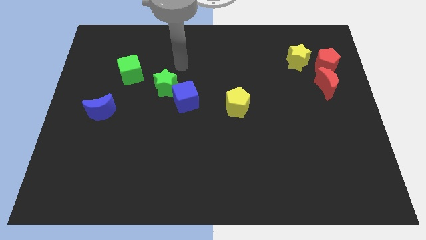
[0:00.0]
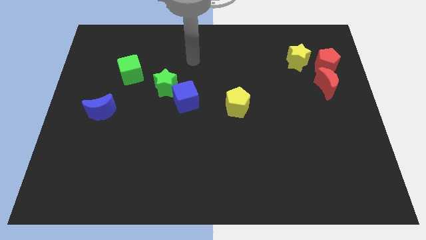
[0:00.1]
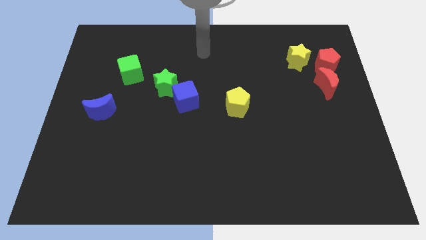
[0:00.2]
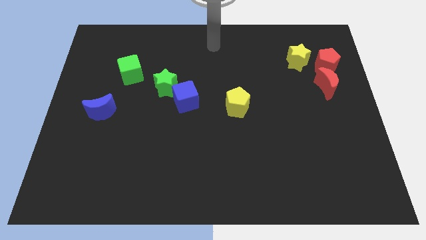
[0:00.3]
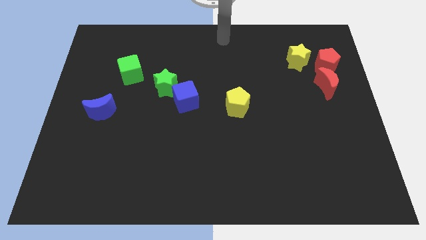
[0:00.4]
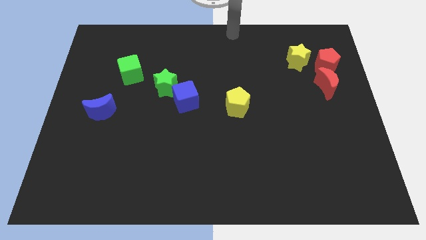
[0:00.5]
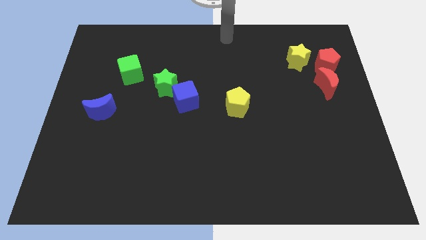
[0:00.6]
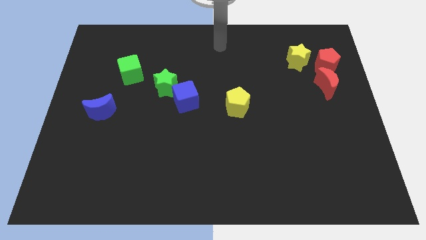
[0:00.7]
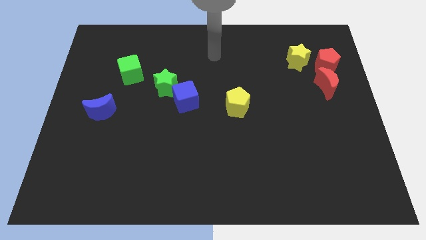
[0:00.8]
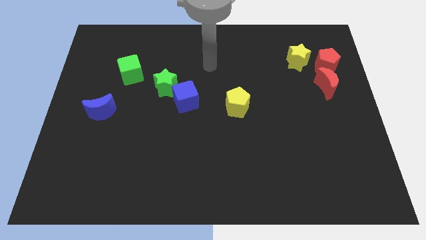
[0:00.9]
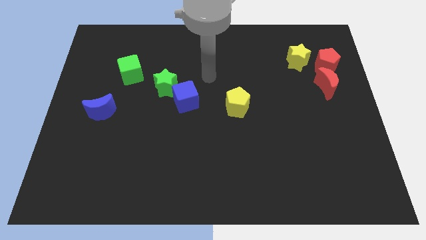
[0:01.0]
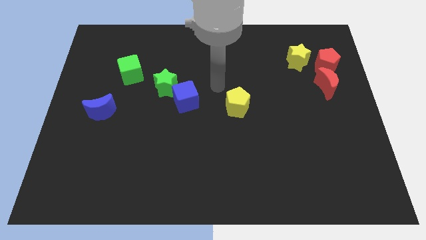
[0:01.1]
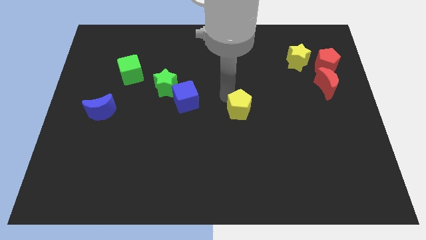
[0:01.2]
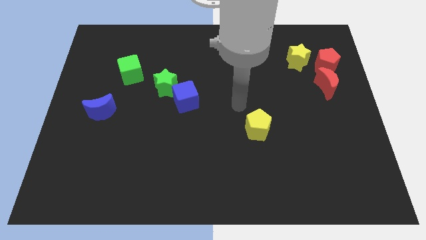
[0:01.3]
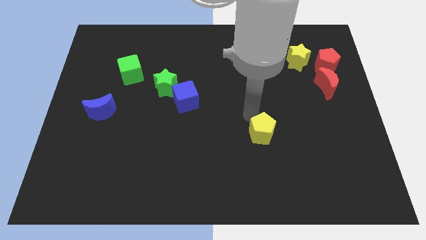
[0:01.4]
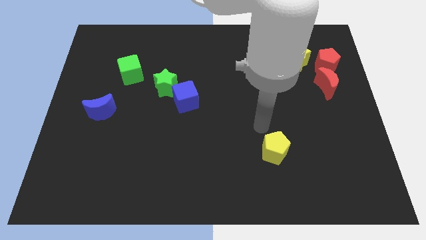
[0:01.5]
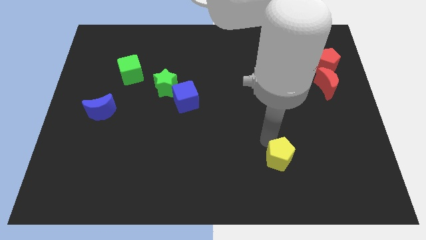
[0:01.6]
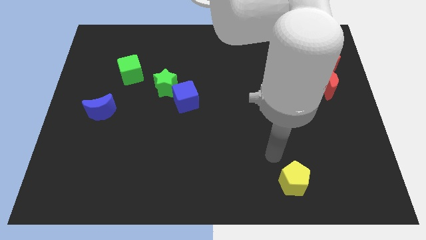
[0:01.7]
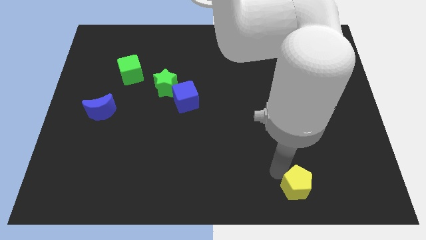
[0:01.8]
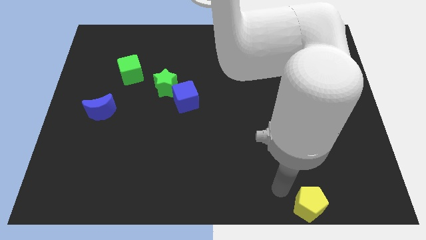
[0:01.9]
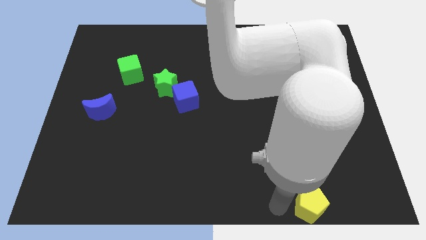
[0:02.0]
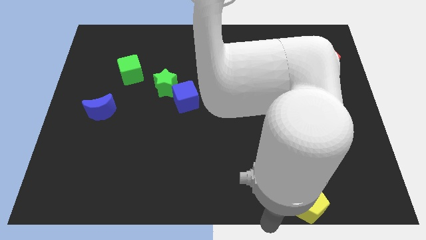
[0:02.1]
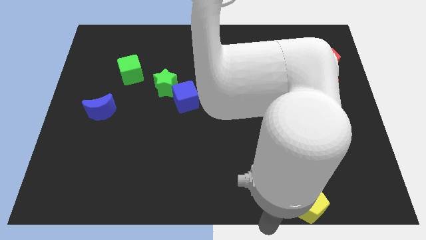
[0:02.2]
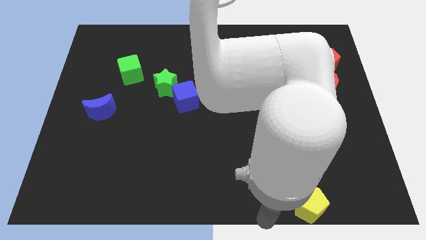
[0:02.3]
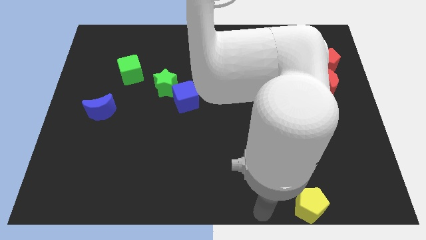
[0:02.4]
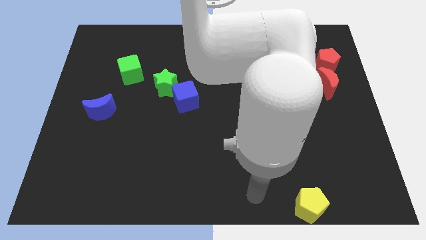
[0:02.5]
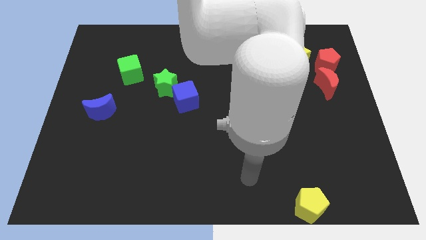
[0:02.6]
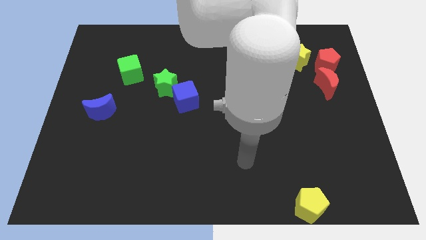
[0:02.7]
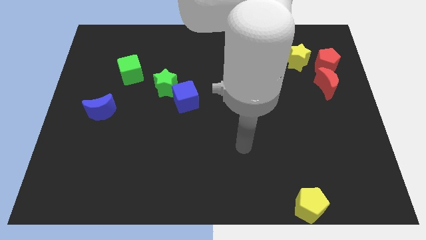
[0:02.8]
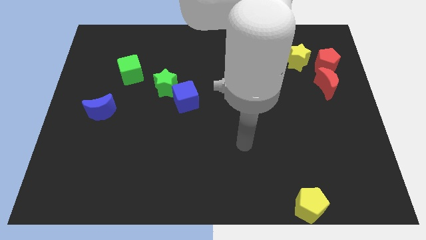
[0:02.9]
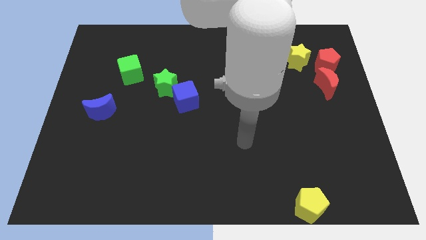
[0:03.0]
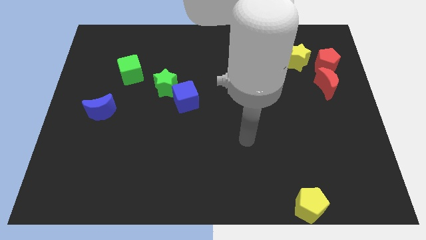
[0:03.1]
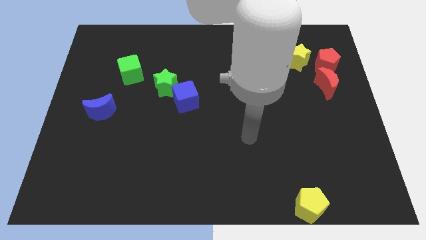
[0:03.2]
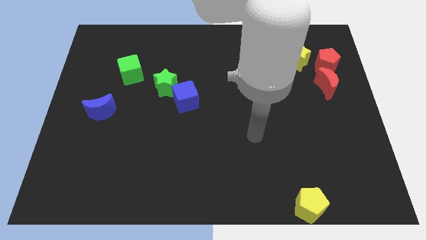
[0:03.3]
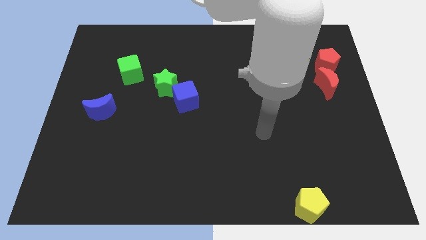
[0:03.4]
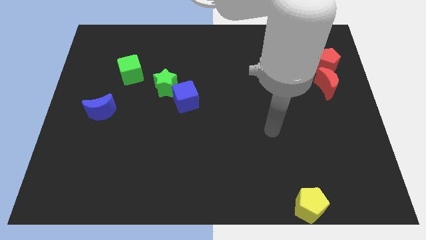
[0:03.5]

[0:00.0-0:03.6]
move the yellow pentagon towards the bottom right of the board

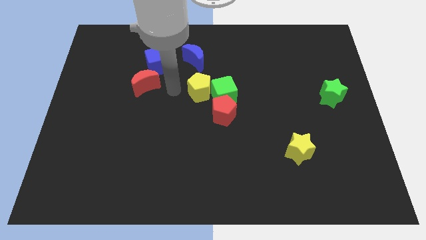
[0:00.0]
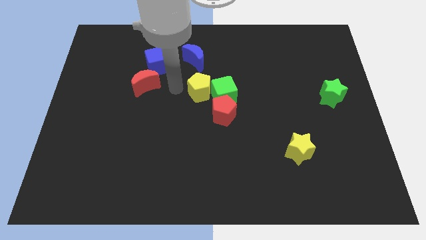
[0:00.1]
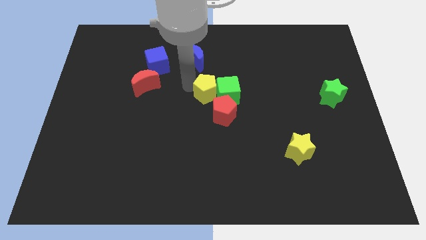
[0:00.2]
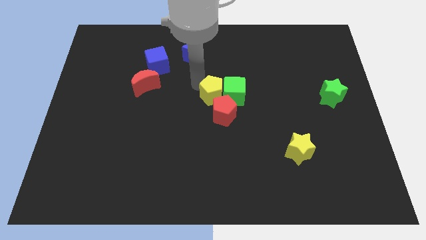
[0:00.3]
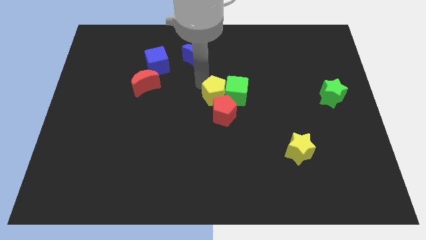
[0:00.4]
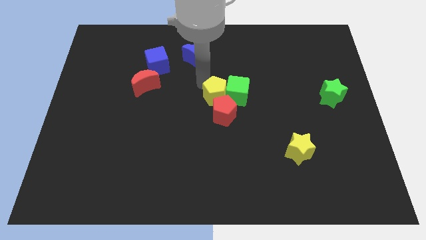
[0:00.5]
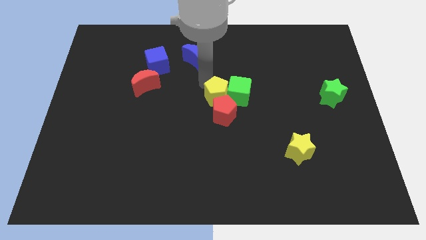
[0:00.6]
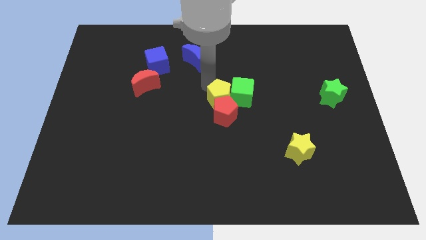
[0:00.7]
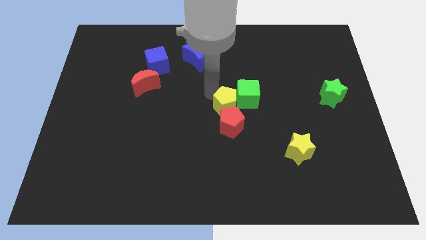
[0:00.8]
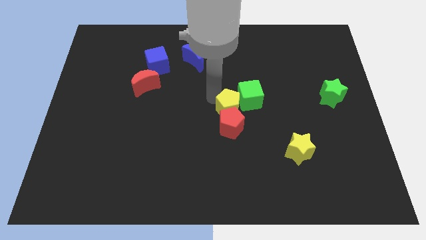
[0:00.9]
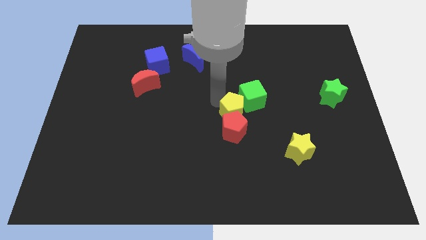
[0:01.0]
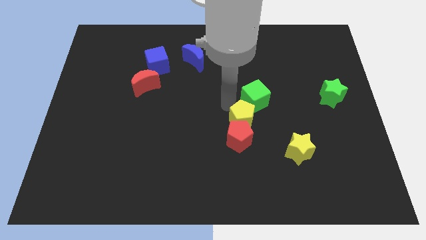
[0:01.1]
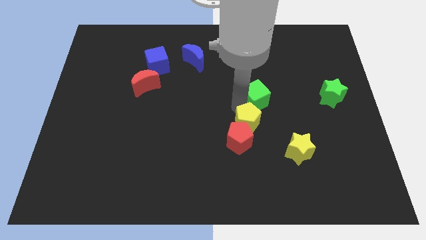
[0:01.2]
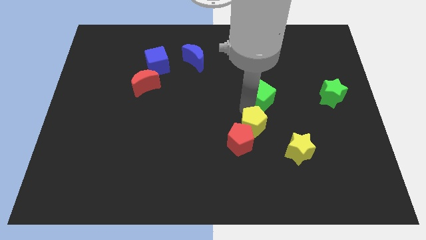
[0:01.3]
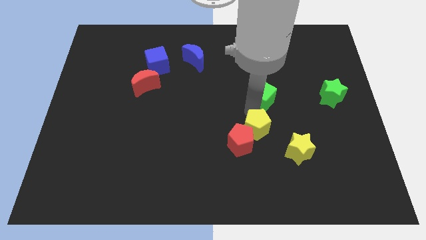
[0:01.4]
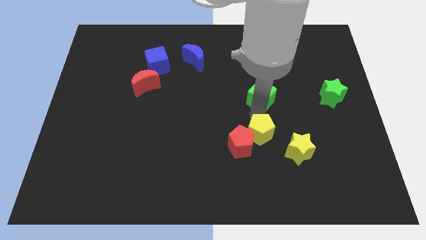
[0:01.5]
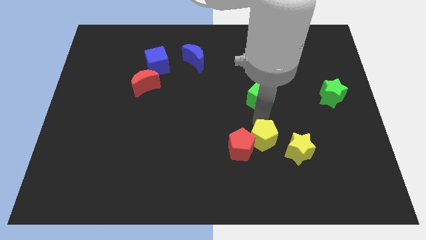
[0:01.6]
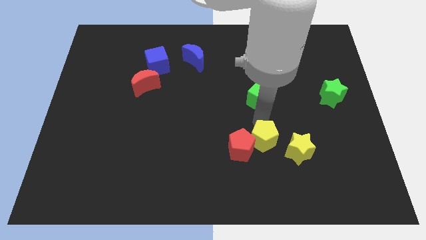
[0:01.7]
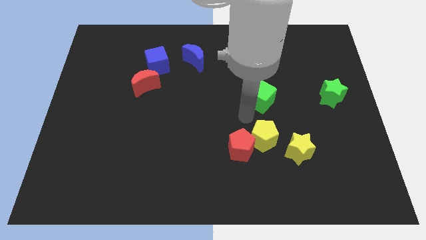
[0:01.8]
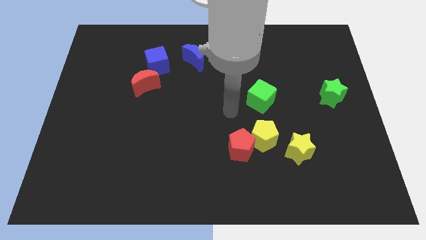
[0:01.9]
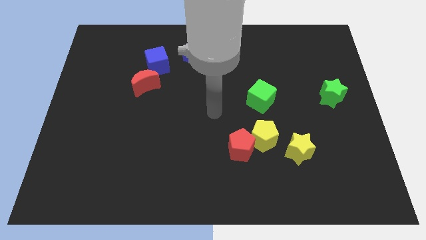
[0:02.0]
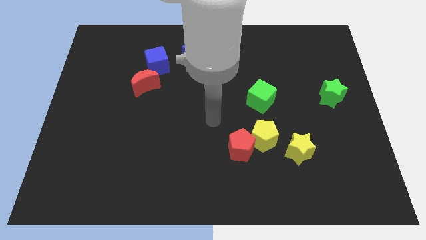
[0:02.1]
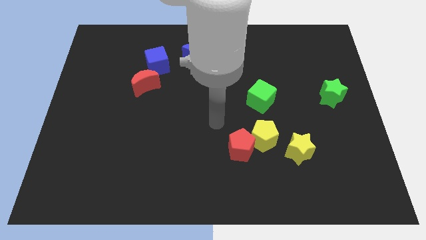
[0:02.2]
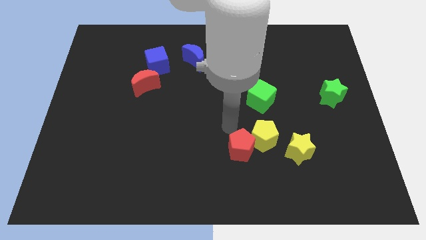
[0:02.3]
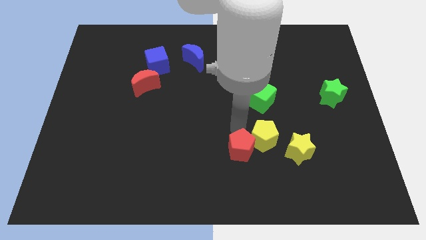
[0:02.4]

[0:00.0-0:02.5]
separate yellow pentagon and green cube

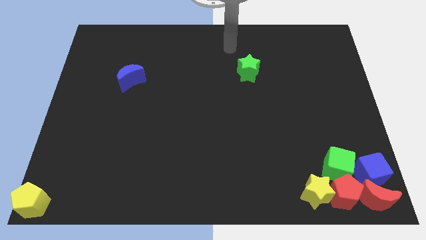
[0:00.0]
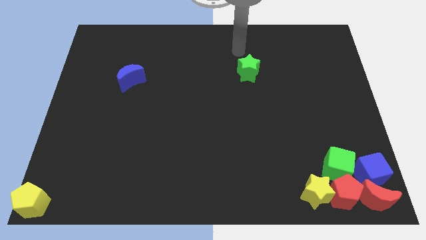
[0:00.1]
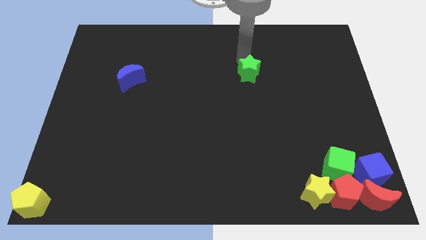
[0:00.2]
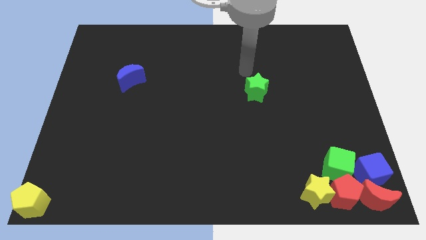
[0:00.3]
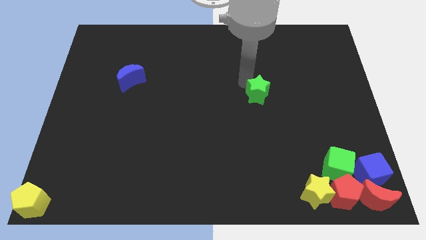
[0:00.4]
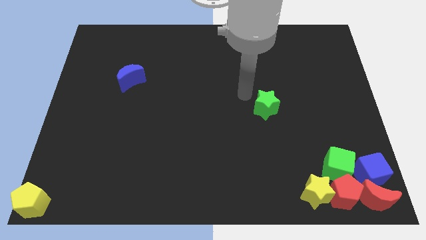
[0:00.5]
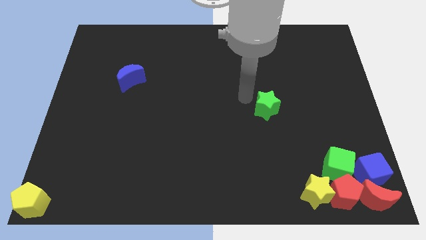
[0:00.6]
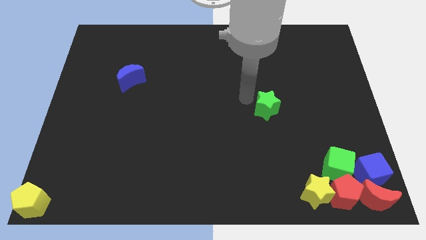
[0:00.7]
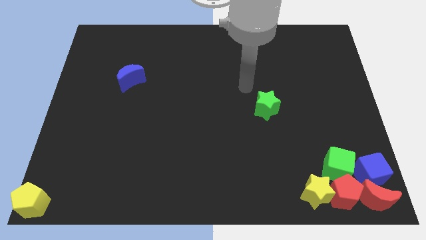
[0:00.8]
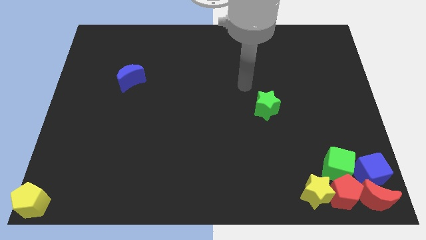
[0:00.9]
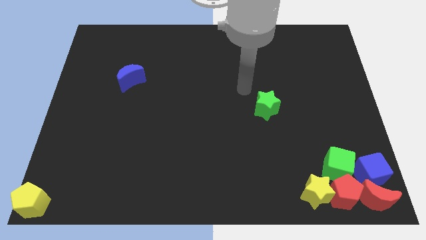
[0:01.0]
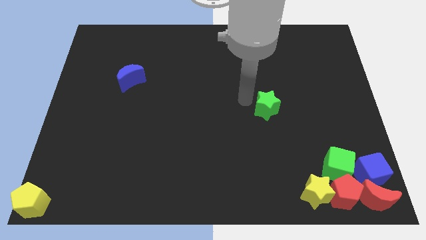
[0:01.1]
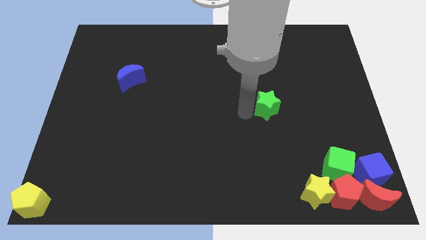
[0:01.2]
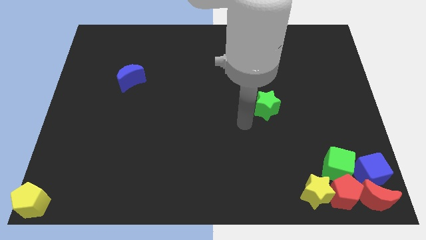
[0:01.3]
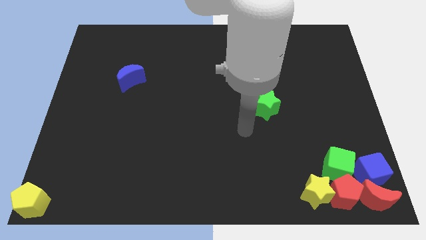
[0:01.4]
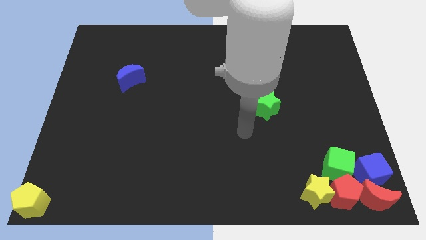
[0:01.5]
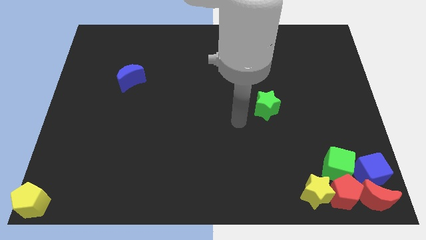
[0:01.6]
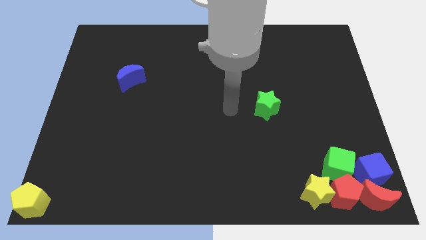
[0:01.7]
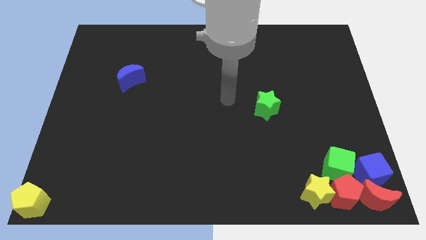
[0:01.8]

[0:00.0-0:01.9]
push the green star slightly downwards

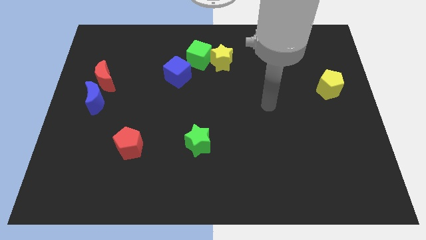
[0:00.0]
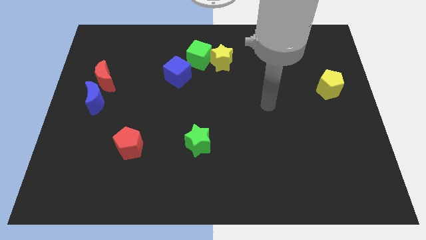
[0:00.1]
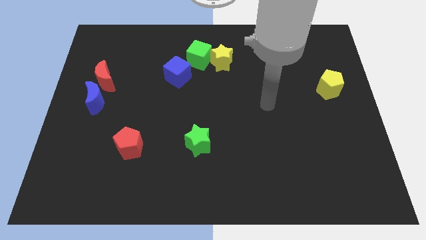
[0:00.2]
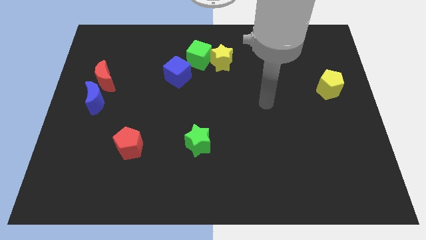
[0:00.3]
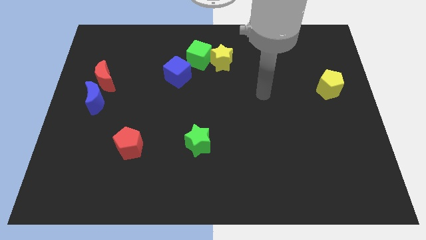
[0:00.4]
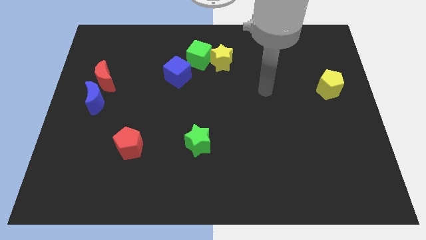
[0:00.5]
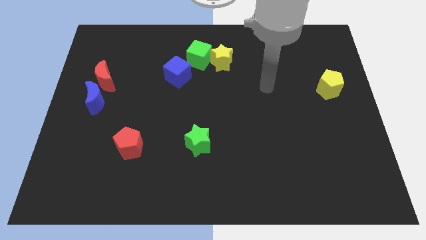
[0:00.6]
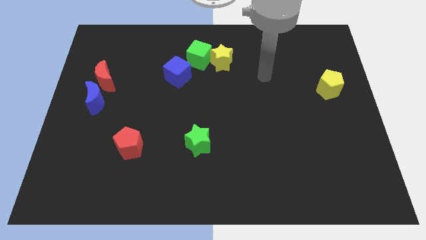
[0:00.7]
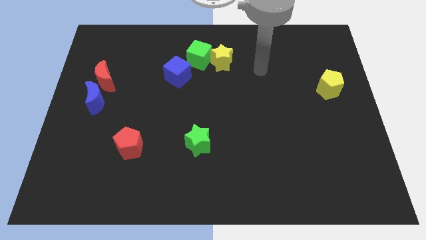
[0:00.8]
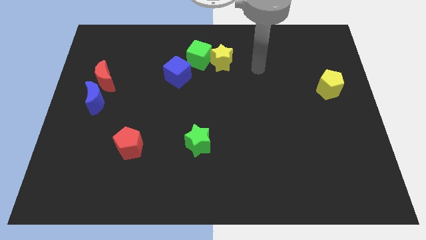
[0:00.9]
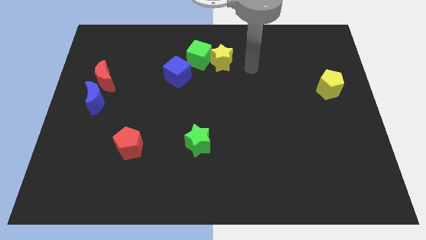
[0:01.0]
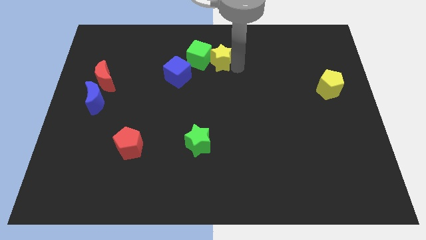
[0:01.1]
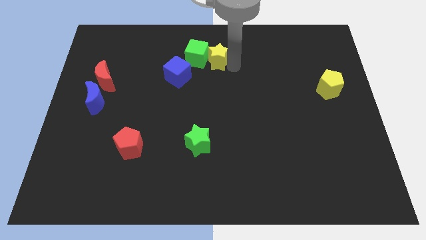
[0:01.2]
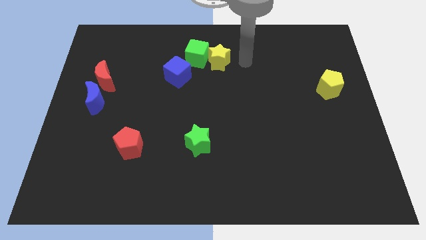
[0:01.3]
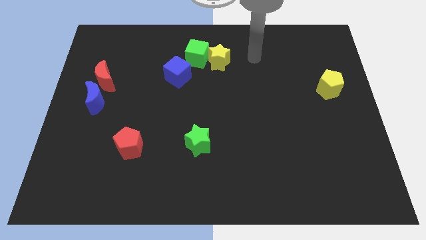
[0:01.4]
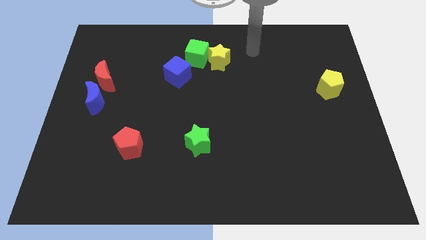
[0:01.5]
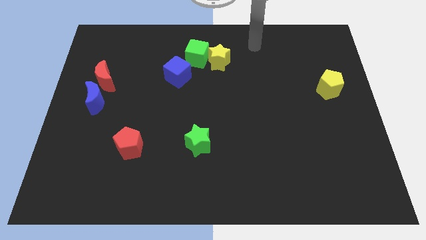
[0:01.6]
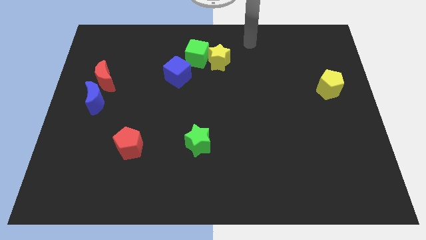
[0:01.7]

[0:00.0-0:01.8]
slightly push the yellow star into the green cube
